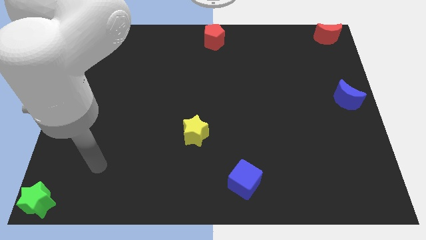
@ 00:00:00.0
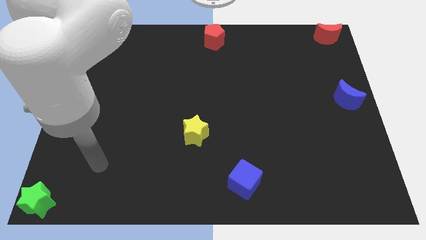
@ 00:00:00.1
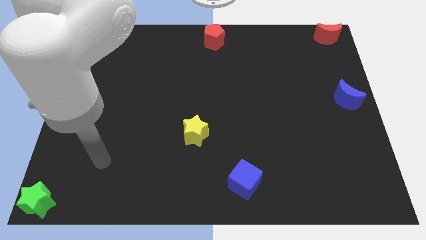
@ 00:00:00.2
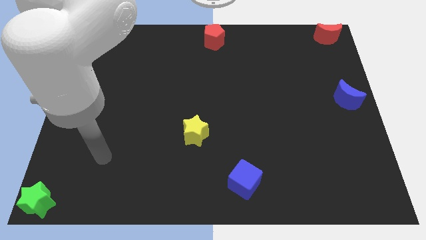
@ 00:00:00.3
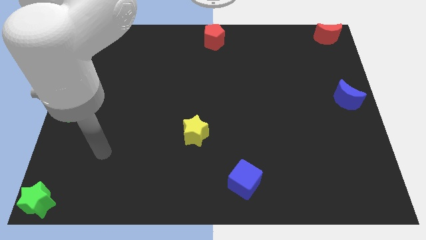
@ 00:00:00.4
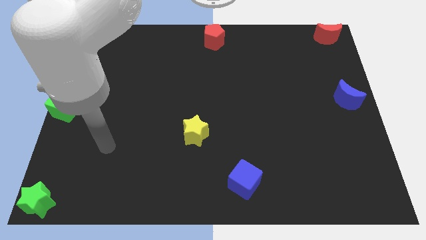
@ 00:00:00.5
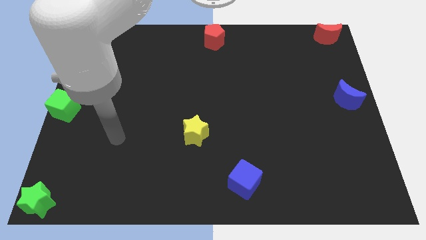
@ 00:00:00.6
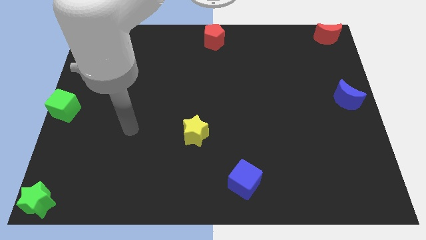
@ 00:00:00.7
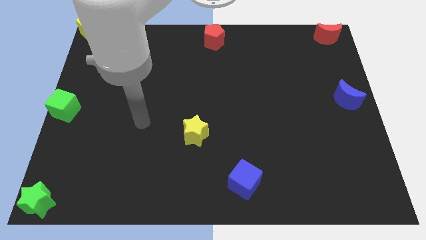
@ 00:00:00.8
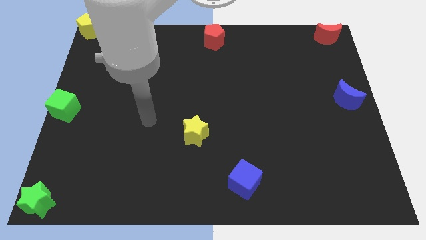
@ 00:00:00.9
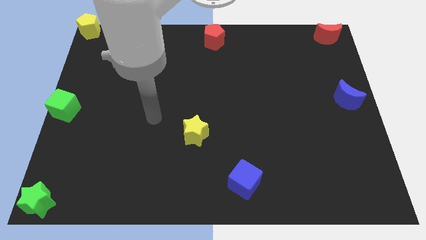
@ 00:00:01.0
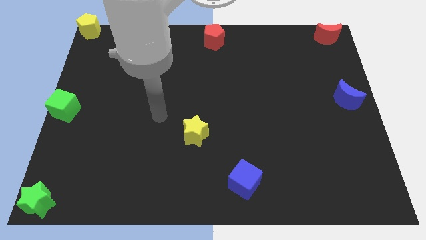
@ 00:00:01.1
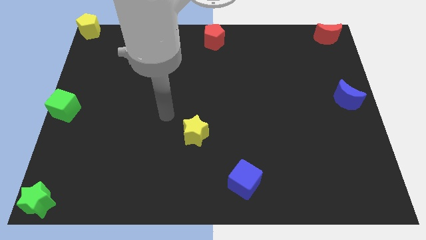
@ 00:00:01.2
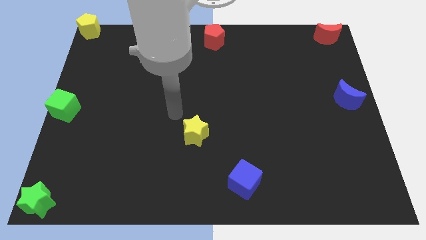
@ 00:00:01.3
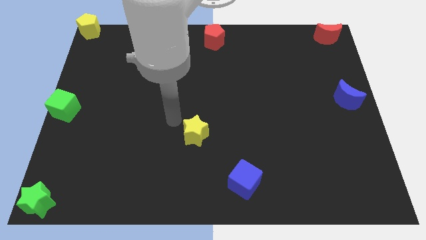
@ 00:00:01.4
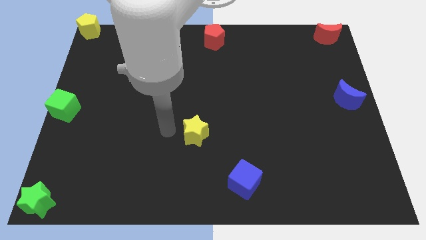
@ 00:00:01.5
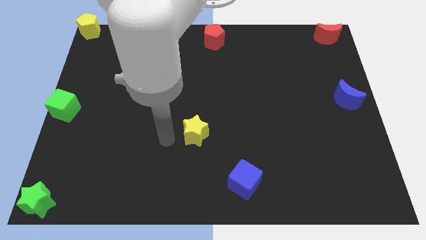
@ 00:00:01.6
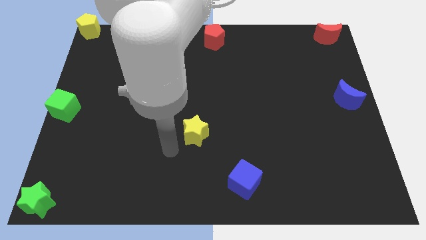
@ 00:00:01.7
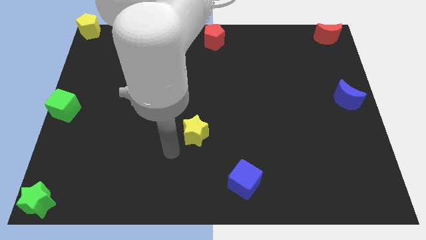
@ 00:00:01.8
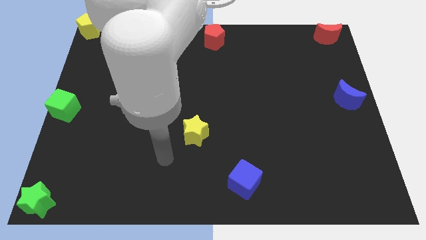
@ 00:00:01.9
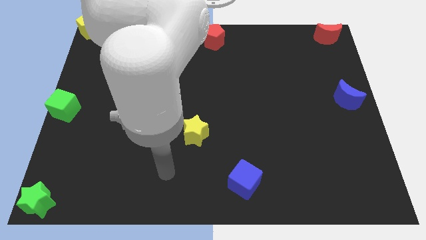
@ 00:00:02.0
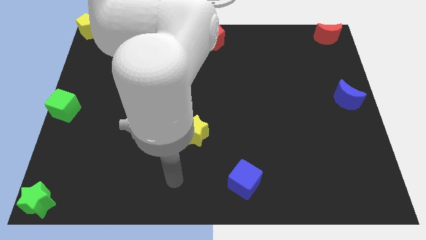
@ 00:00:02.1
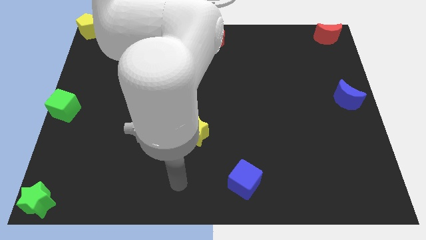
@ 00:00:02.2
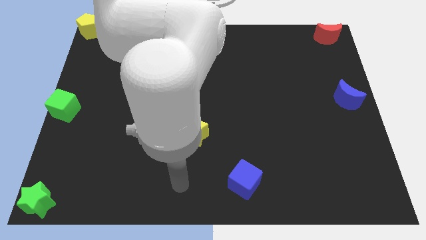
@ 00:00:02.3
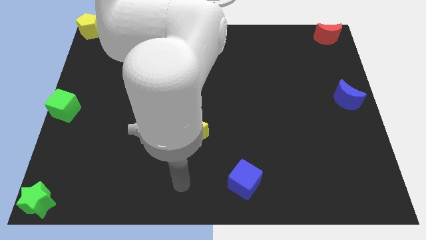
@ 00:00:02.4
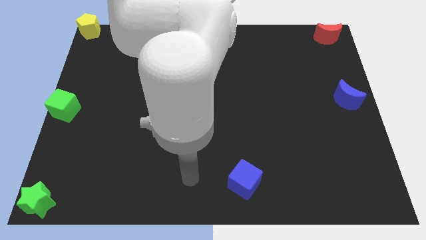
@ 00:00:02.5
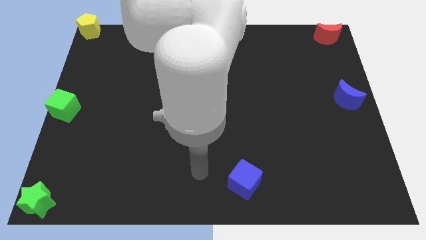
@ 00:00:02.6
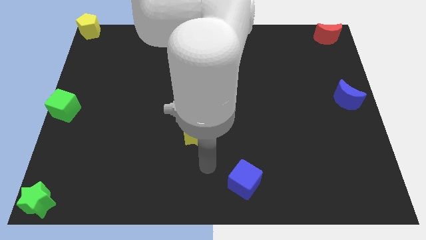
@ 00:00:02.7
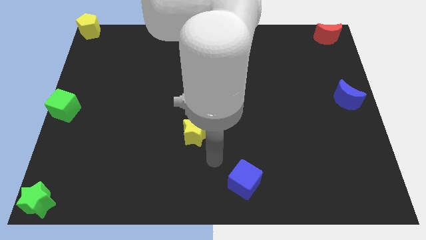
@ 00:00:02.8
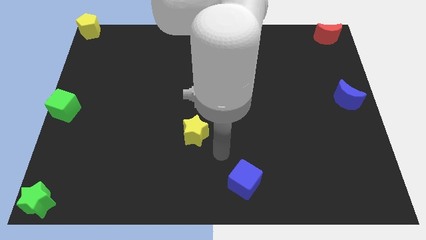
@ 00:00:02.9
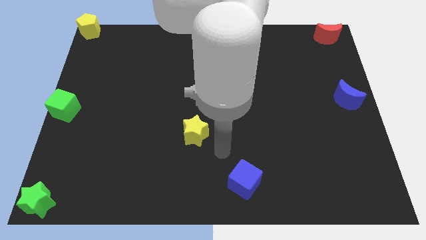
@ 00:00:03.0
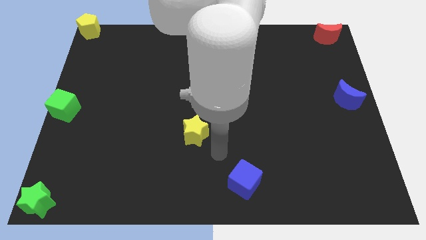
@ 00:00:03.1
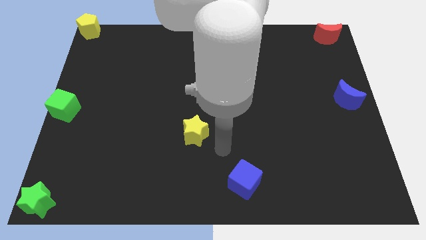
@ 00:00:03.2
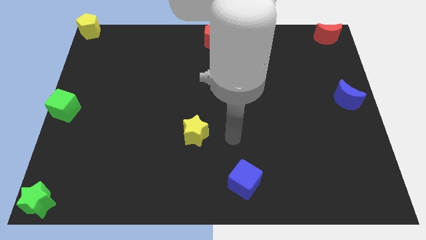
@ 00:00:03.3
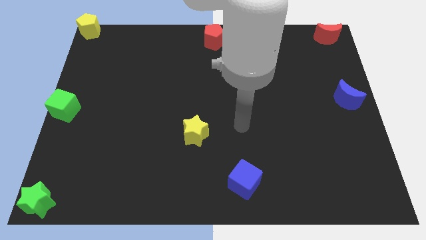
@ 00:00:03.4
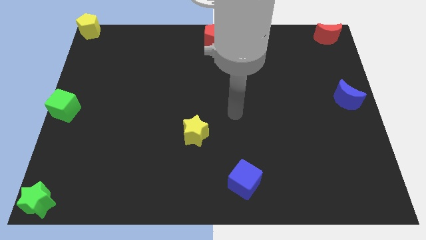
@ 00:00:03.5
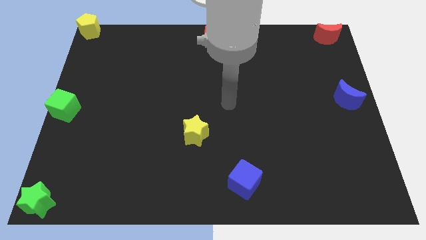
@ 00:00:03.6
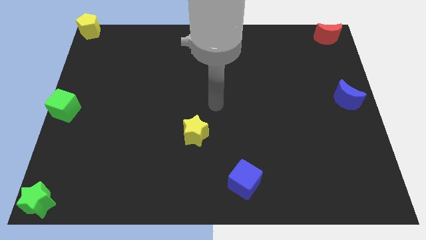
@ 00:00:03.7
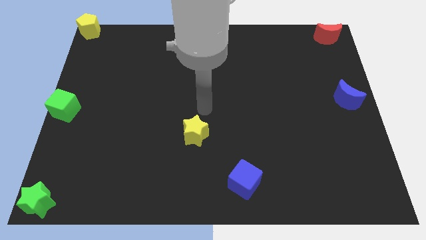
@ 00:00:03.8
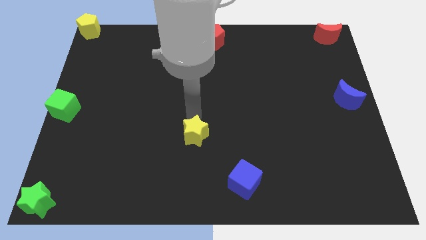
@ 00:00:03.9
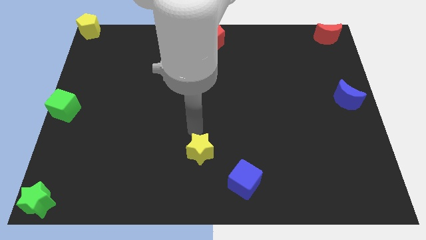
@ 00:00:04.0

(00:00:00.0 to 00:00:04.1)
move your arm to the yellow star

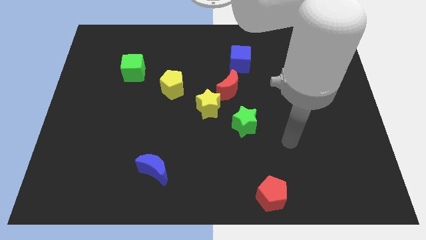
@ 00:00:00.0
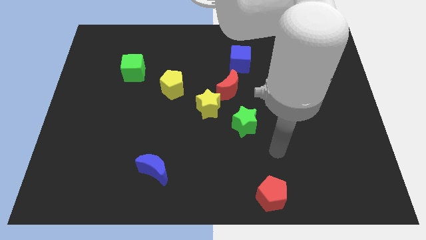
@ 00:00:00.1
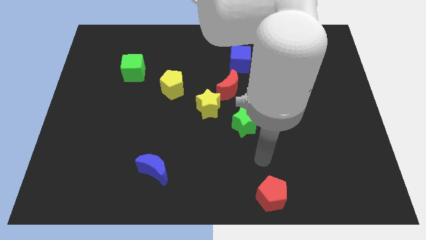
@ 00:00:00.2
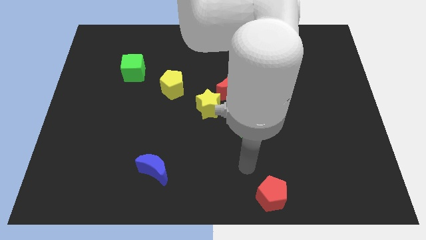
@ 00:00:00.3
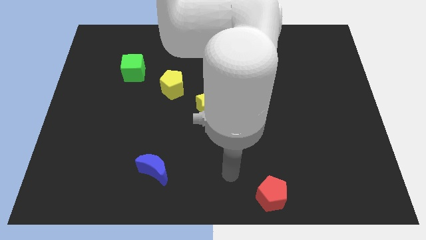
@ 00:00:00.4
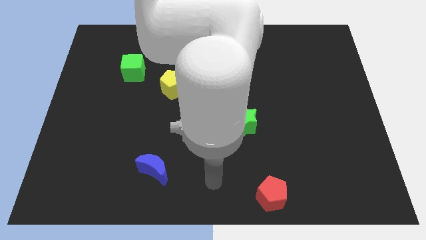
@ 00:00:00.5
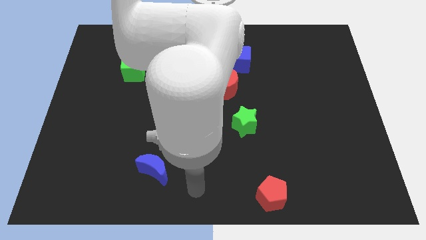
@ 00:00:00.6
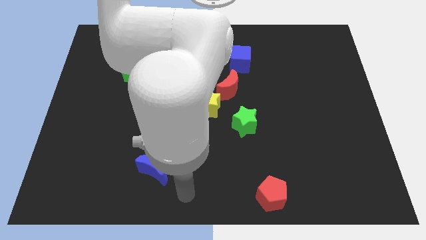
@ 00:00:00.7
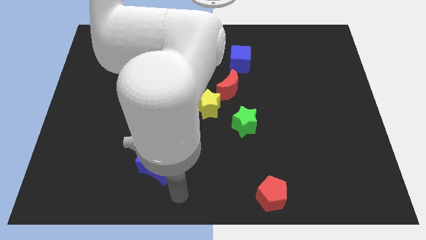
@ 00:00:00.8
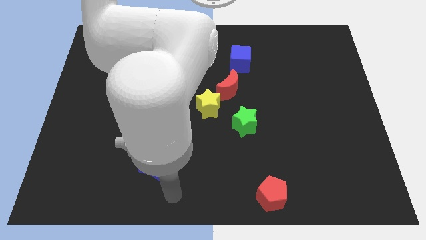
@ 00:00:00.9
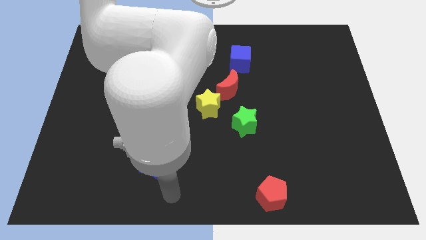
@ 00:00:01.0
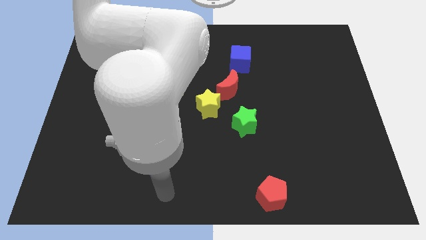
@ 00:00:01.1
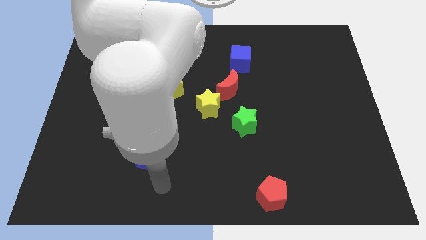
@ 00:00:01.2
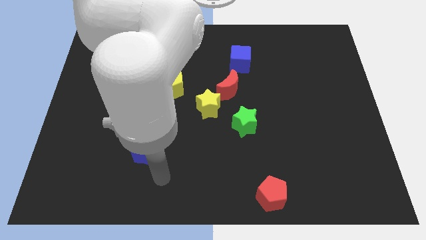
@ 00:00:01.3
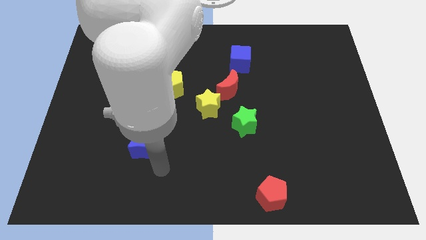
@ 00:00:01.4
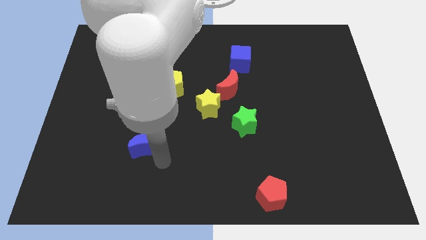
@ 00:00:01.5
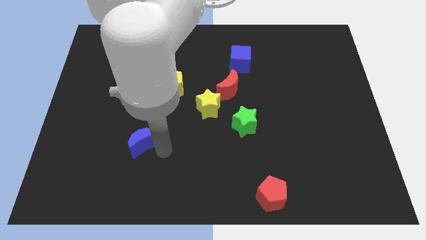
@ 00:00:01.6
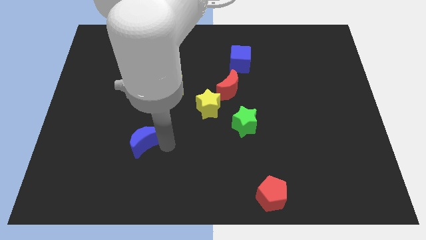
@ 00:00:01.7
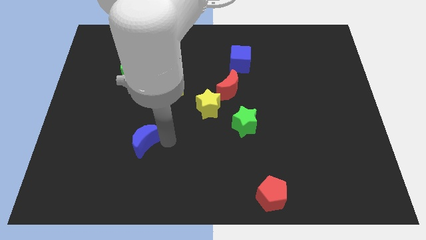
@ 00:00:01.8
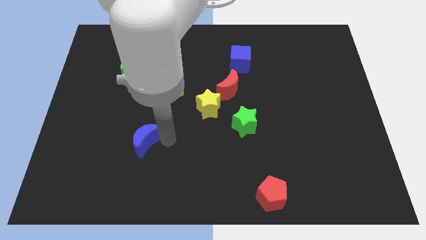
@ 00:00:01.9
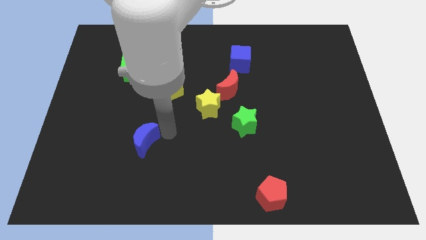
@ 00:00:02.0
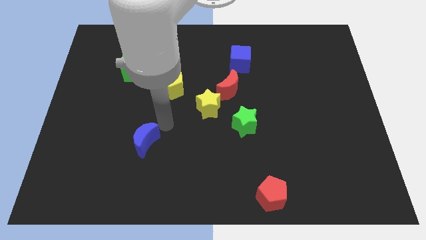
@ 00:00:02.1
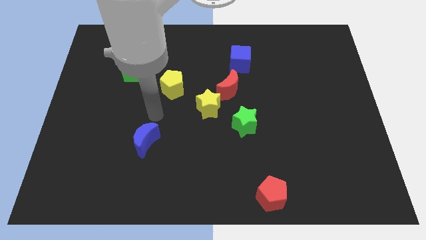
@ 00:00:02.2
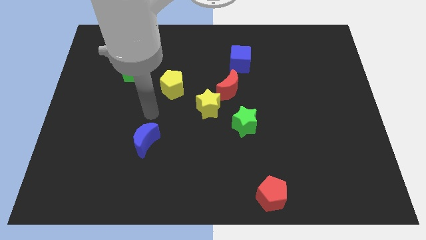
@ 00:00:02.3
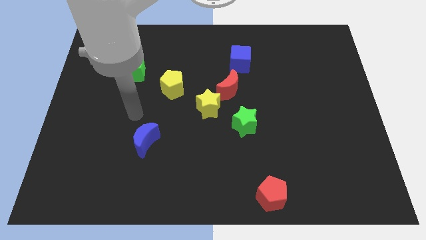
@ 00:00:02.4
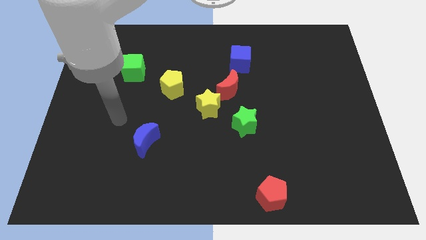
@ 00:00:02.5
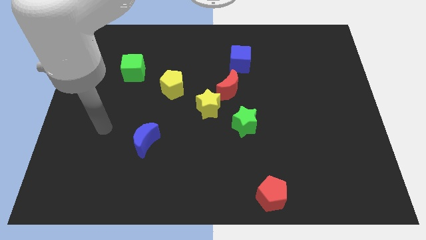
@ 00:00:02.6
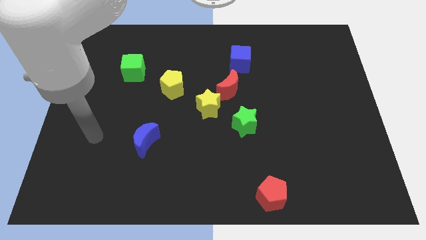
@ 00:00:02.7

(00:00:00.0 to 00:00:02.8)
push the blue crescent up slightly

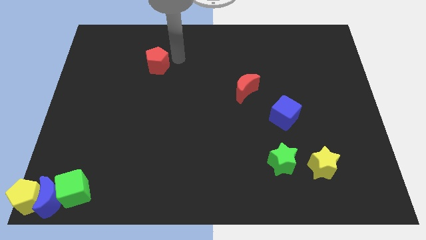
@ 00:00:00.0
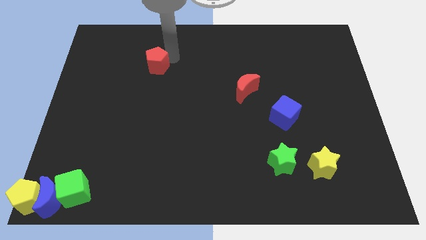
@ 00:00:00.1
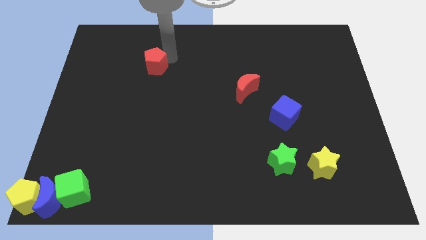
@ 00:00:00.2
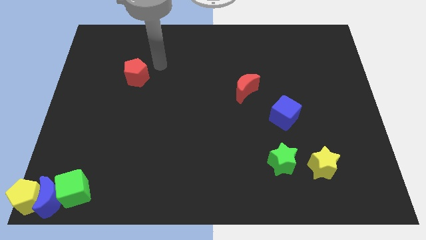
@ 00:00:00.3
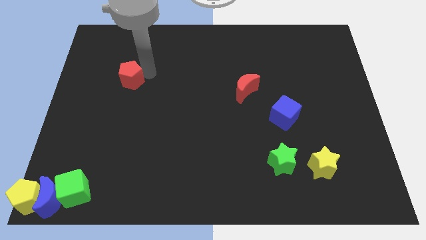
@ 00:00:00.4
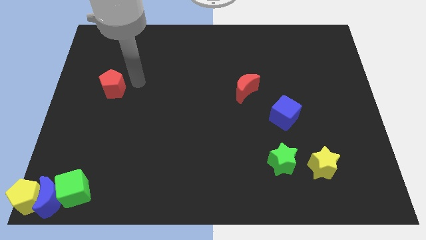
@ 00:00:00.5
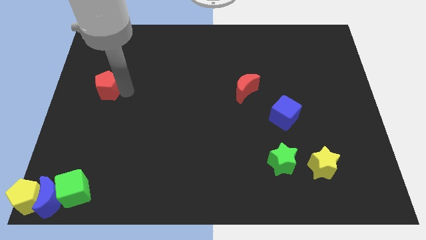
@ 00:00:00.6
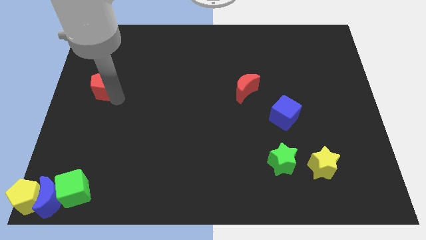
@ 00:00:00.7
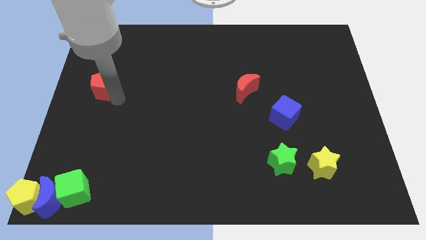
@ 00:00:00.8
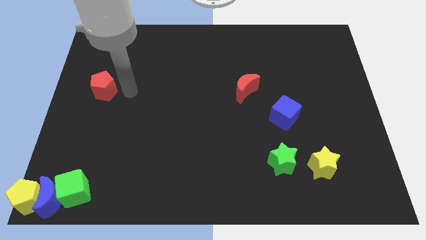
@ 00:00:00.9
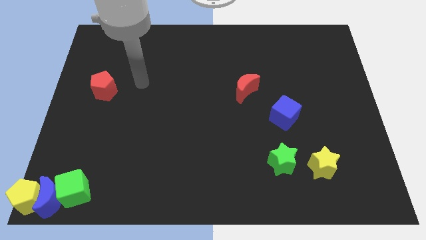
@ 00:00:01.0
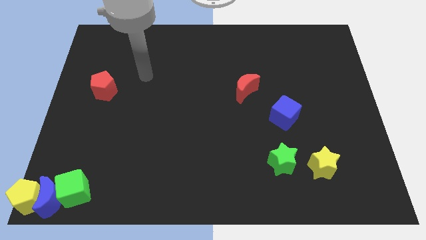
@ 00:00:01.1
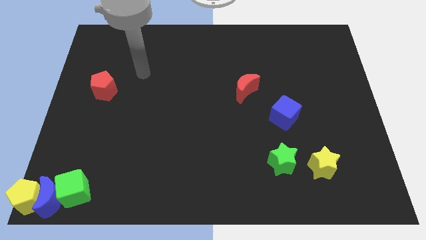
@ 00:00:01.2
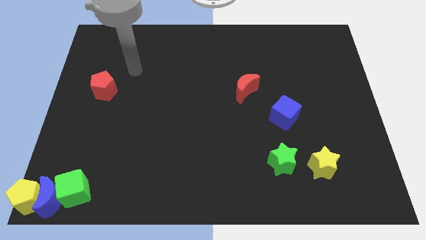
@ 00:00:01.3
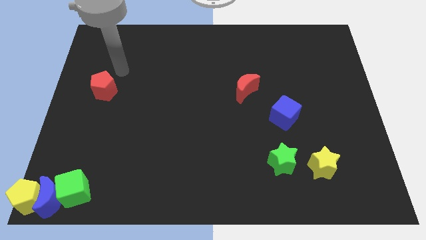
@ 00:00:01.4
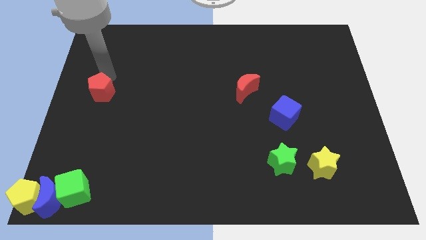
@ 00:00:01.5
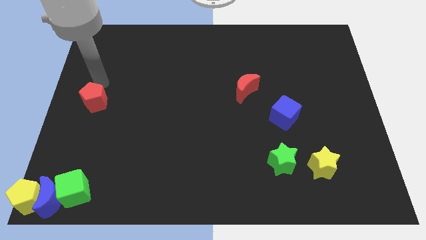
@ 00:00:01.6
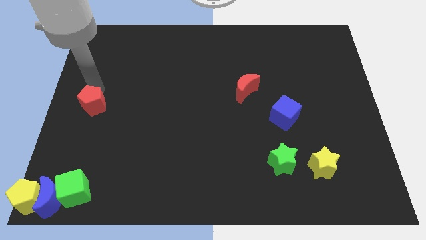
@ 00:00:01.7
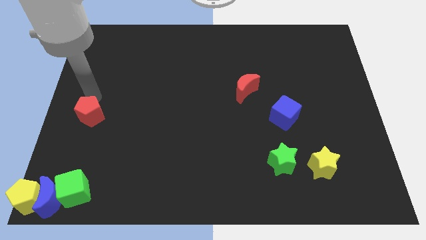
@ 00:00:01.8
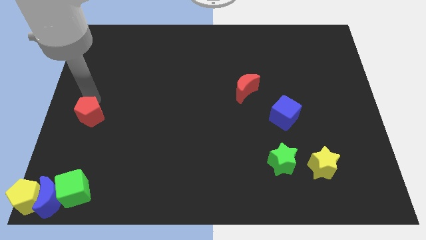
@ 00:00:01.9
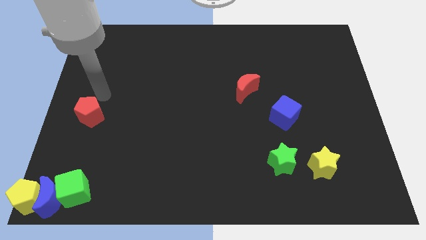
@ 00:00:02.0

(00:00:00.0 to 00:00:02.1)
place red pentagon above the green cube
